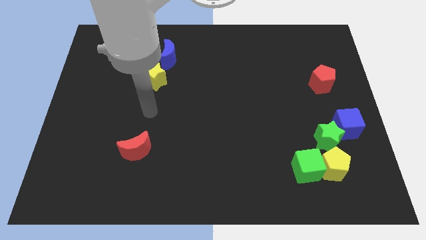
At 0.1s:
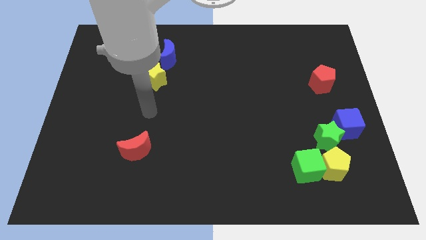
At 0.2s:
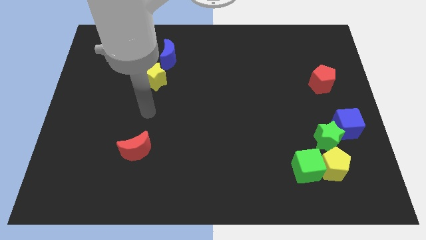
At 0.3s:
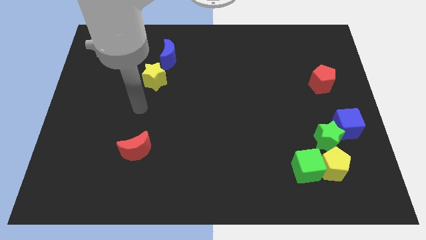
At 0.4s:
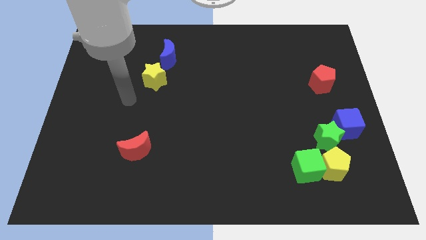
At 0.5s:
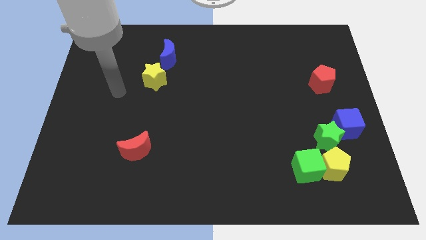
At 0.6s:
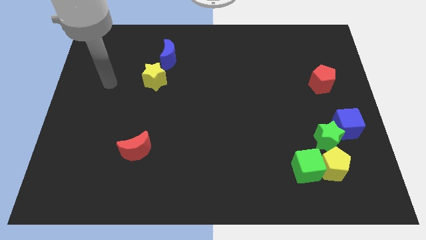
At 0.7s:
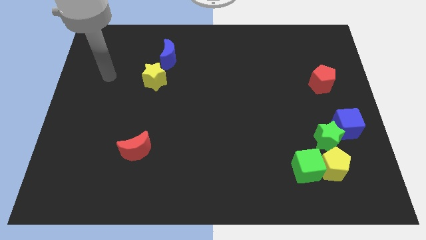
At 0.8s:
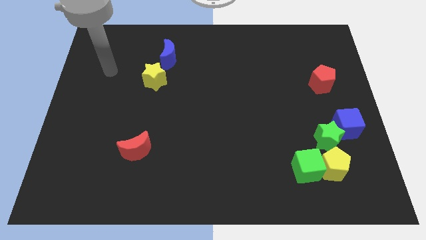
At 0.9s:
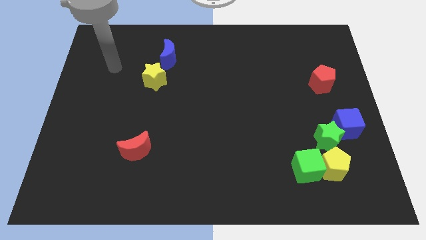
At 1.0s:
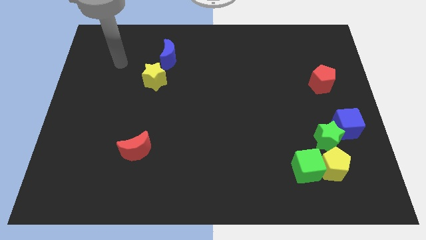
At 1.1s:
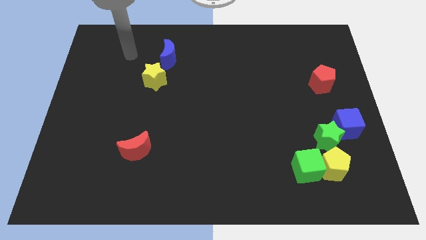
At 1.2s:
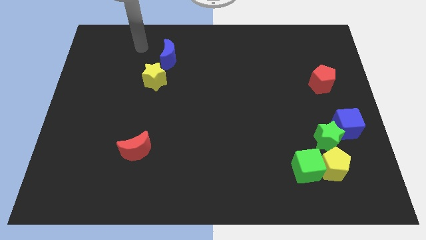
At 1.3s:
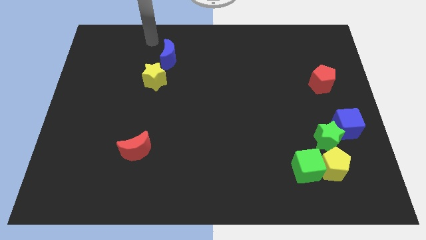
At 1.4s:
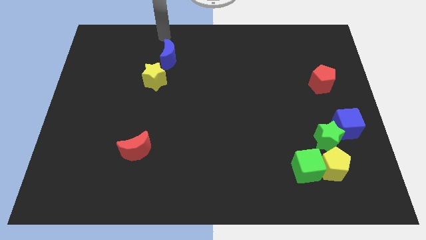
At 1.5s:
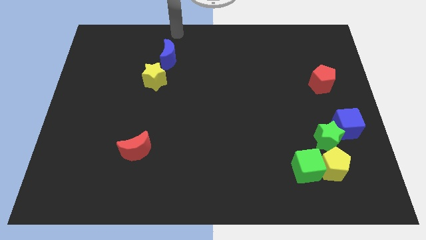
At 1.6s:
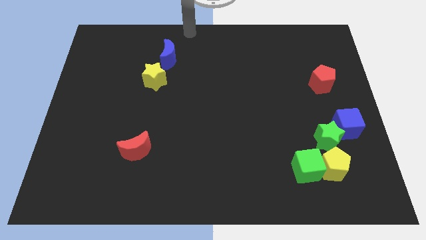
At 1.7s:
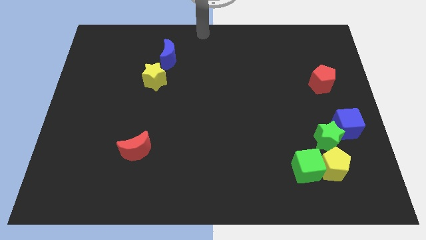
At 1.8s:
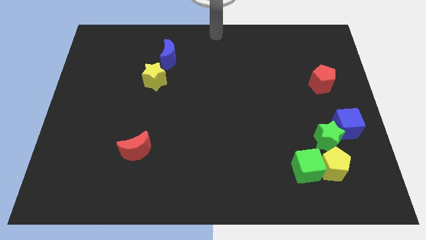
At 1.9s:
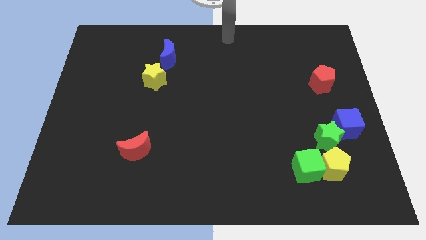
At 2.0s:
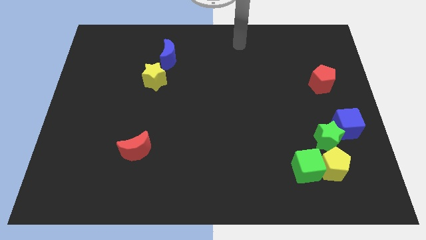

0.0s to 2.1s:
place your hand at the top center

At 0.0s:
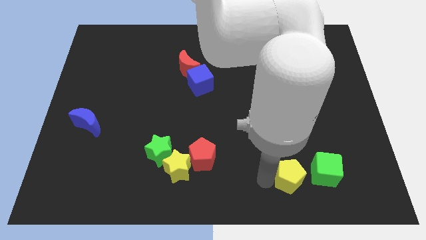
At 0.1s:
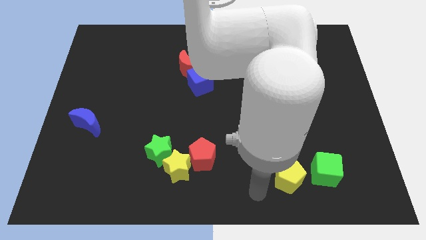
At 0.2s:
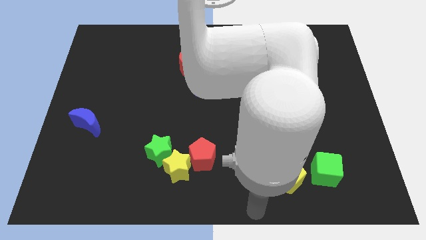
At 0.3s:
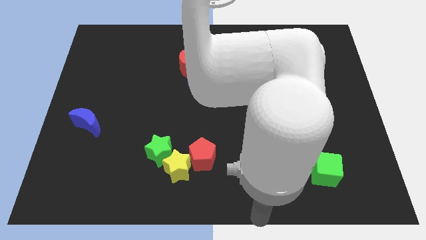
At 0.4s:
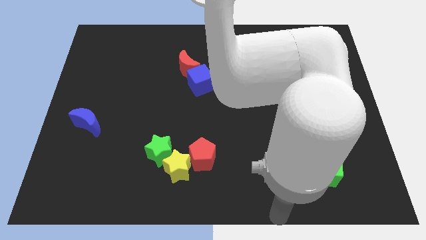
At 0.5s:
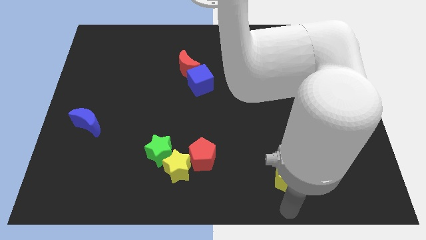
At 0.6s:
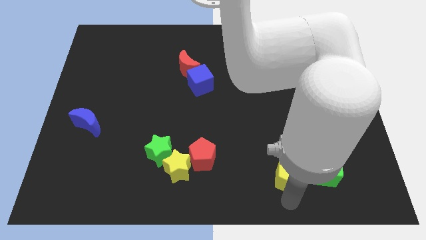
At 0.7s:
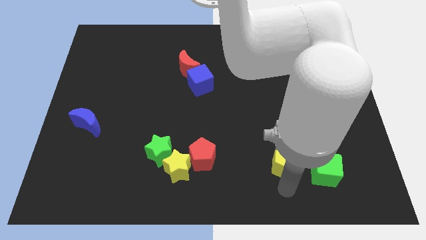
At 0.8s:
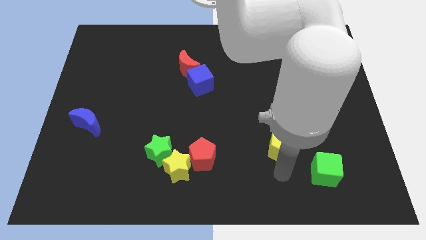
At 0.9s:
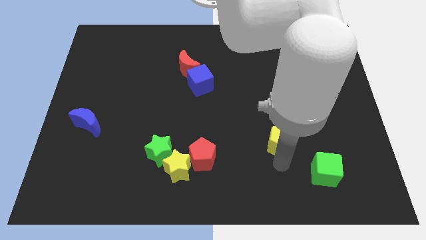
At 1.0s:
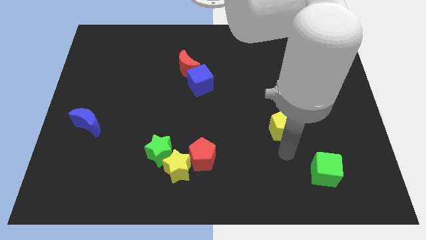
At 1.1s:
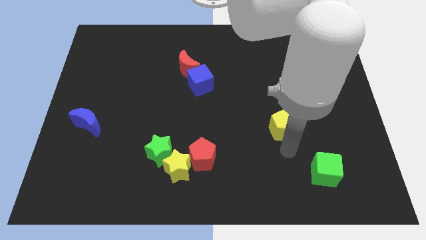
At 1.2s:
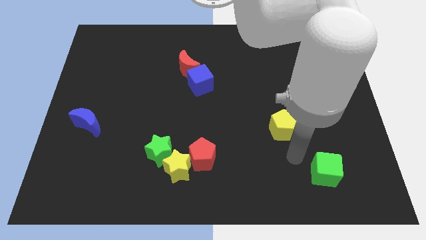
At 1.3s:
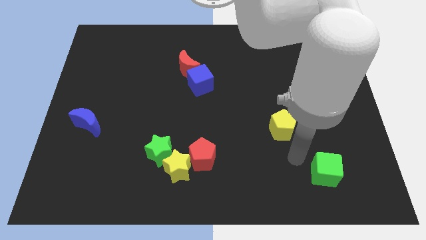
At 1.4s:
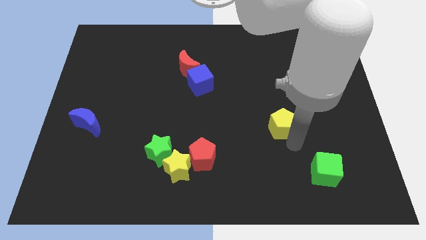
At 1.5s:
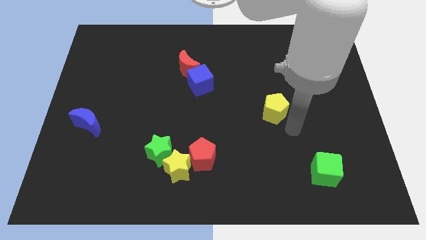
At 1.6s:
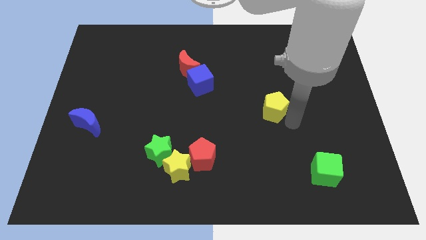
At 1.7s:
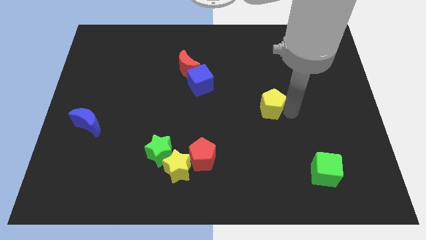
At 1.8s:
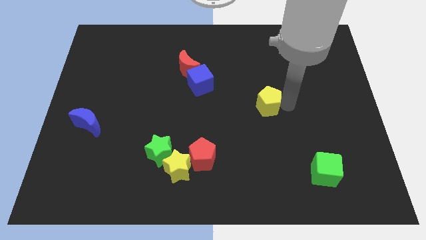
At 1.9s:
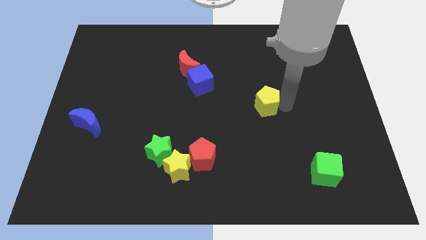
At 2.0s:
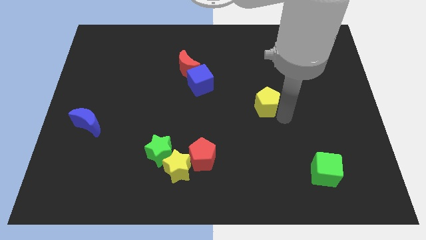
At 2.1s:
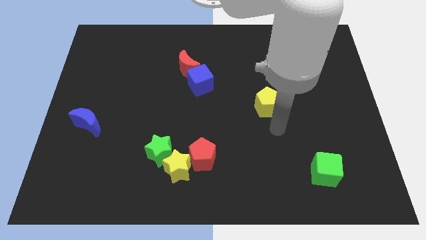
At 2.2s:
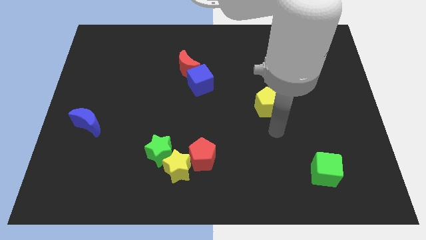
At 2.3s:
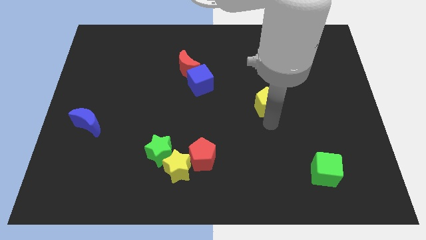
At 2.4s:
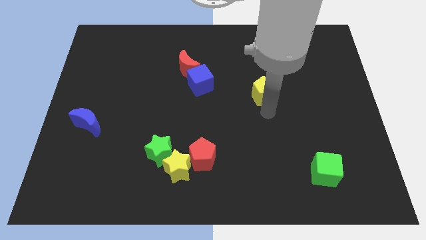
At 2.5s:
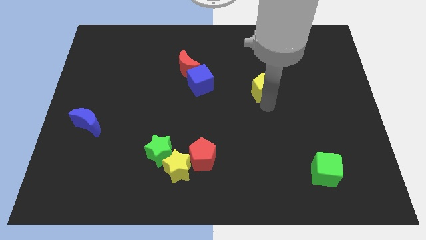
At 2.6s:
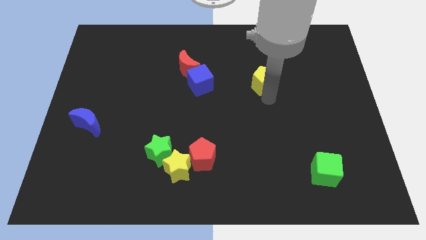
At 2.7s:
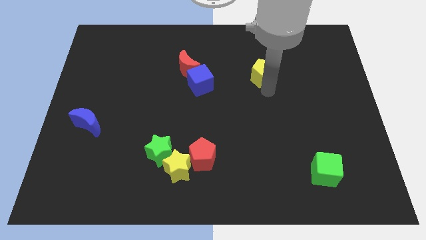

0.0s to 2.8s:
place the yellow pentagon to the right of the blue cube

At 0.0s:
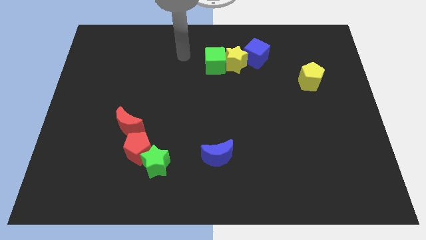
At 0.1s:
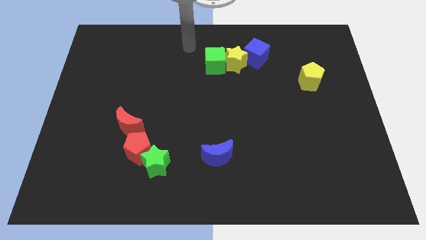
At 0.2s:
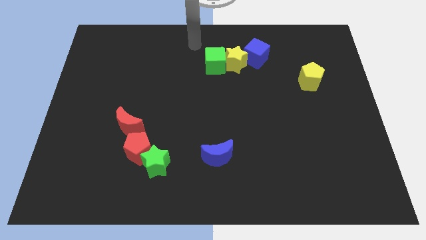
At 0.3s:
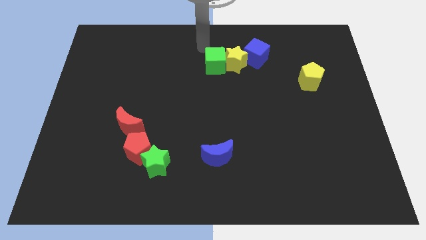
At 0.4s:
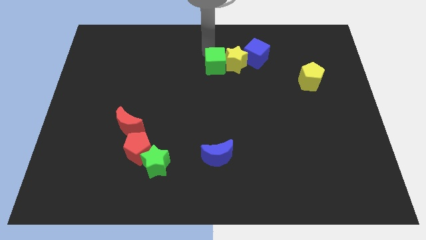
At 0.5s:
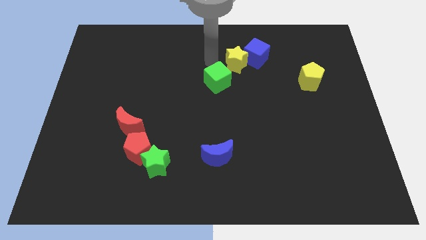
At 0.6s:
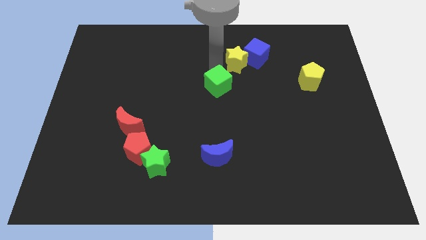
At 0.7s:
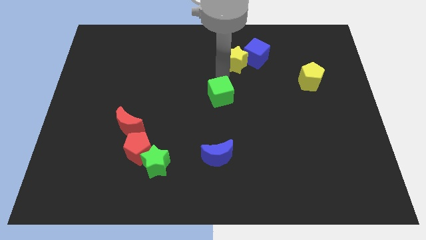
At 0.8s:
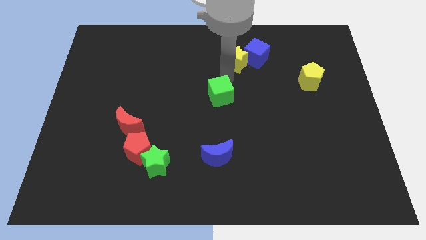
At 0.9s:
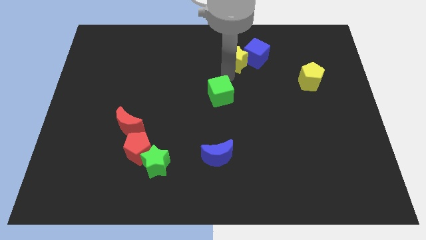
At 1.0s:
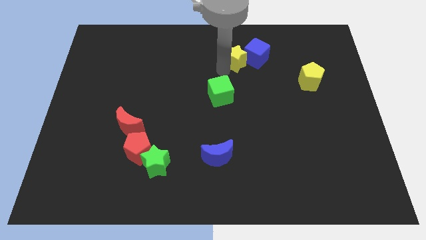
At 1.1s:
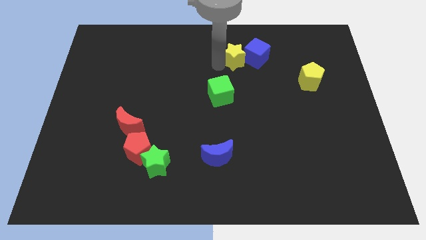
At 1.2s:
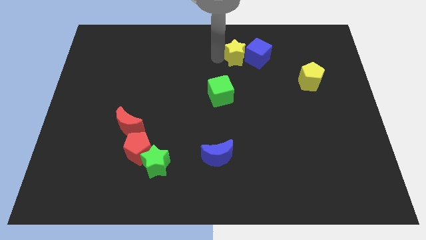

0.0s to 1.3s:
separate the green cube from the yellow star

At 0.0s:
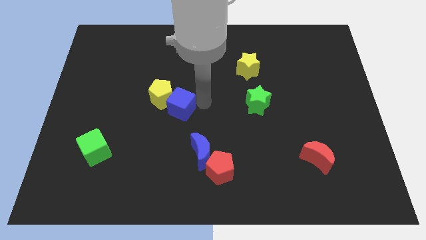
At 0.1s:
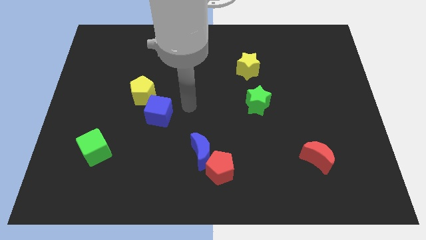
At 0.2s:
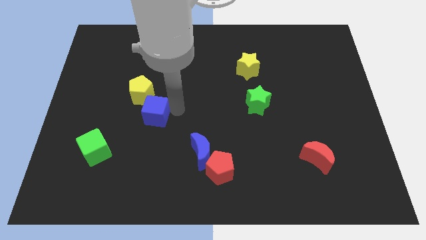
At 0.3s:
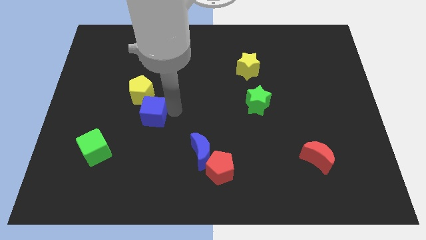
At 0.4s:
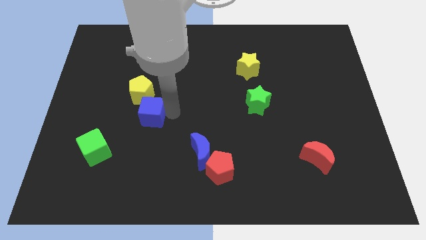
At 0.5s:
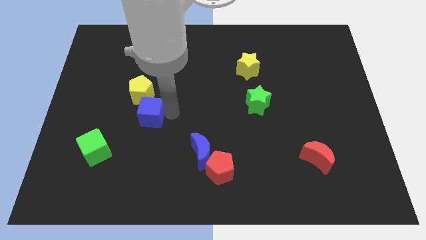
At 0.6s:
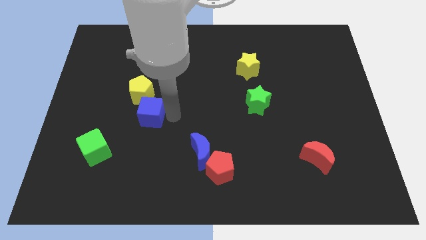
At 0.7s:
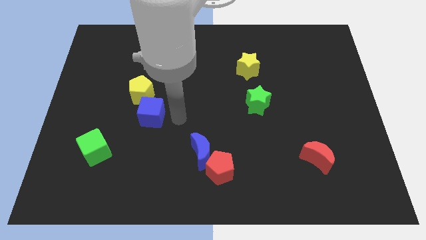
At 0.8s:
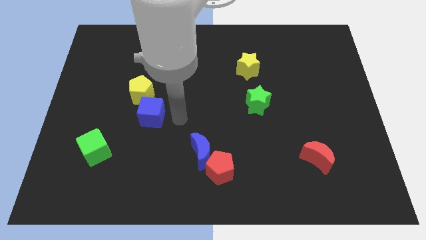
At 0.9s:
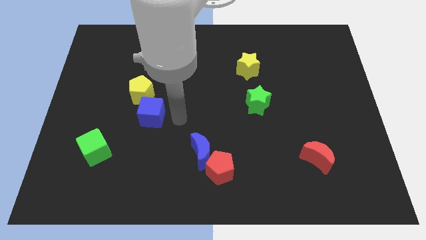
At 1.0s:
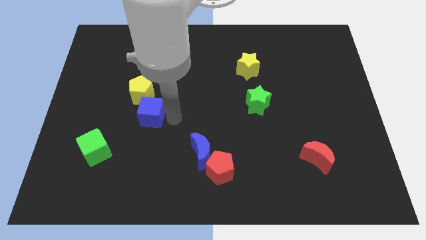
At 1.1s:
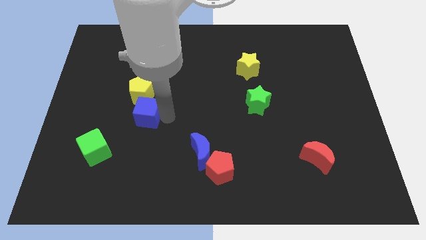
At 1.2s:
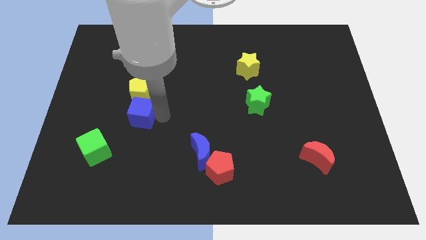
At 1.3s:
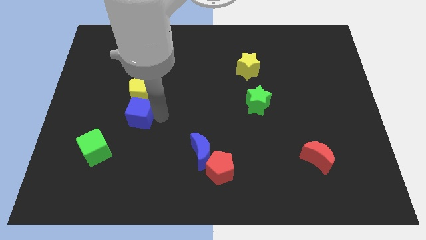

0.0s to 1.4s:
push the blue cube to the bottom of the yellow pentagon

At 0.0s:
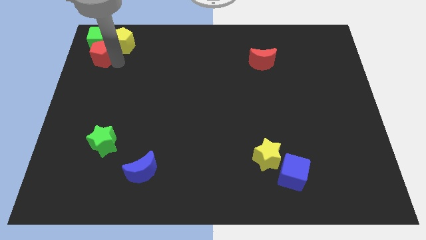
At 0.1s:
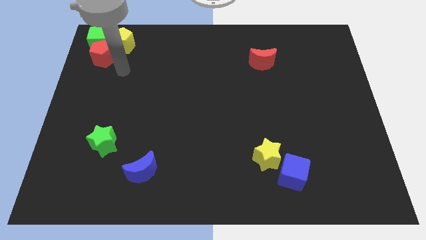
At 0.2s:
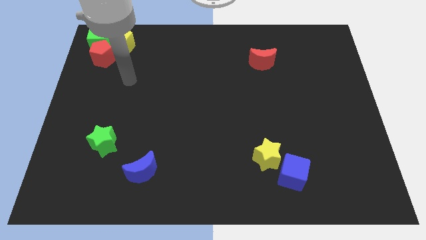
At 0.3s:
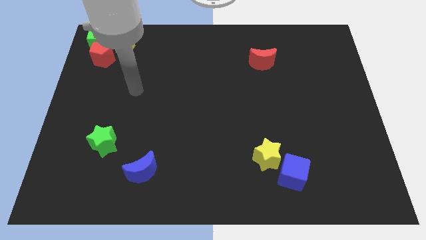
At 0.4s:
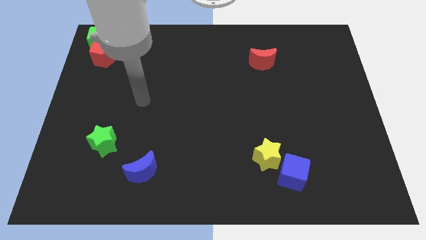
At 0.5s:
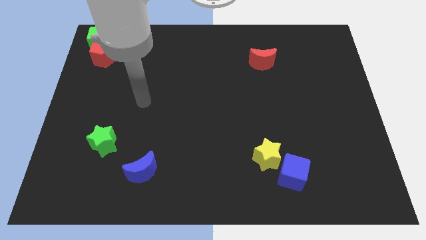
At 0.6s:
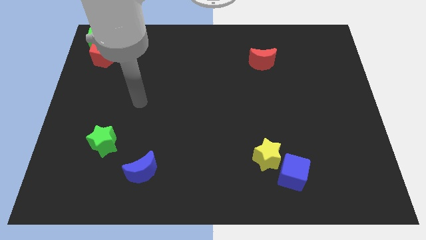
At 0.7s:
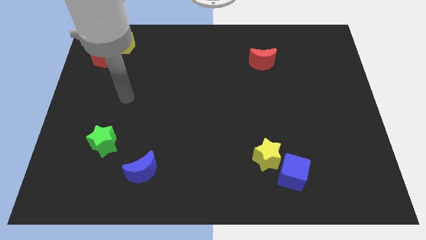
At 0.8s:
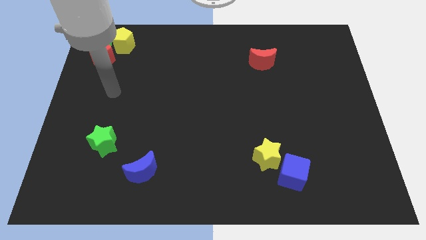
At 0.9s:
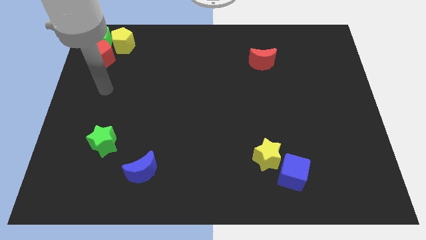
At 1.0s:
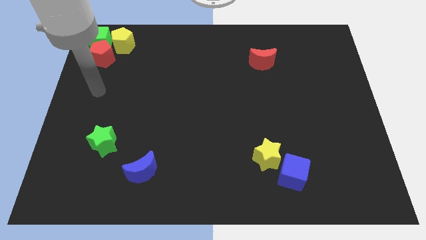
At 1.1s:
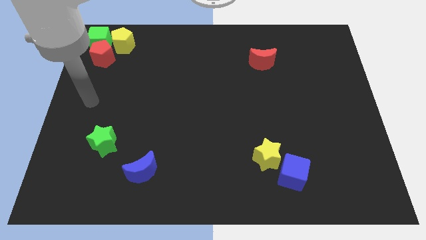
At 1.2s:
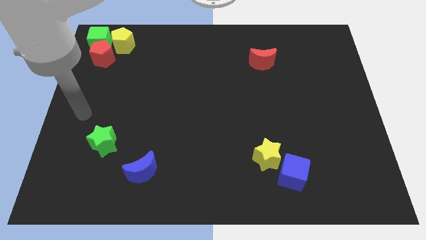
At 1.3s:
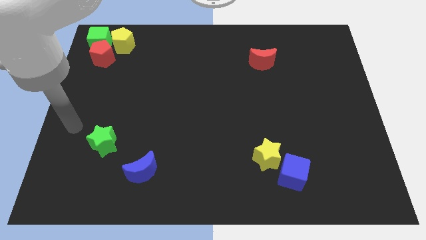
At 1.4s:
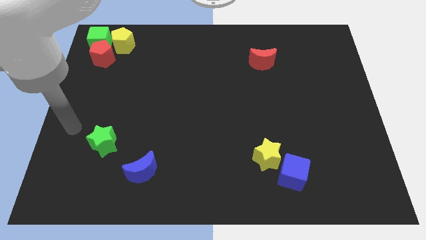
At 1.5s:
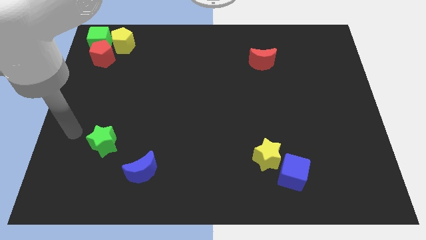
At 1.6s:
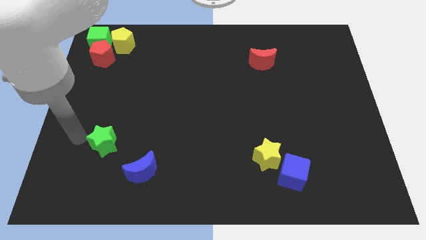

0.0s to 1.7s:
move your arm towards the left to the green star
